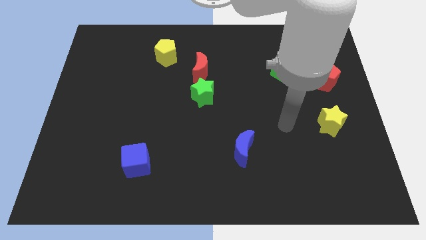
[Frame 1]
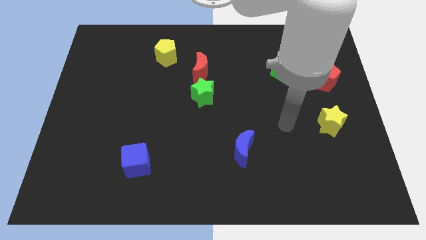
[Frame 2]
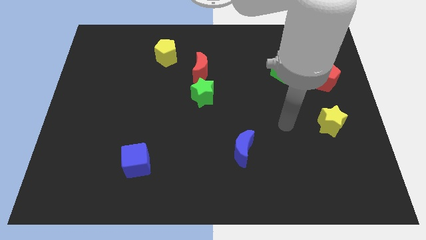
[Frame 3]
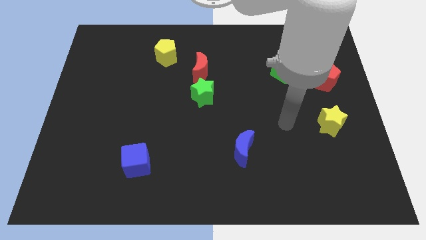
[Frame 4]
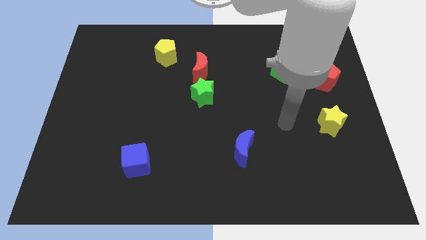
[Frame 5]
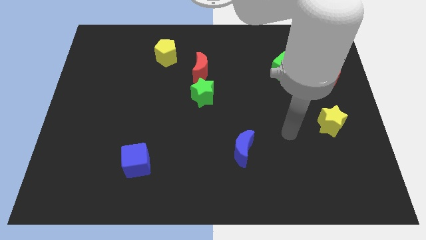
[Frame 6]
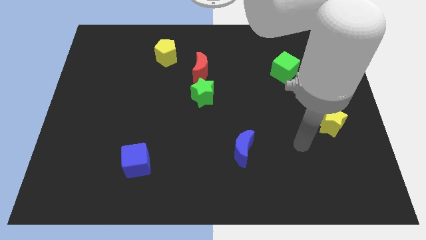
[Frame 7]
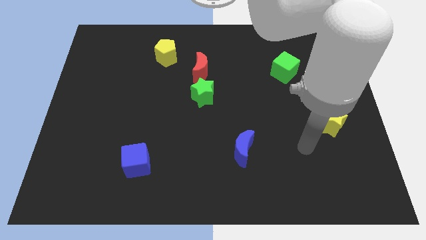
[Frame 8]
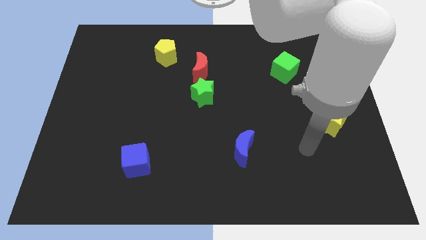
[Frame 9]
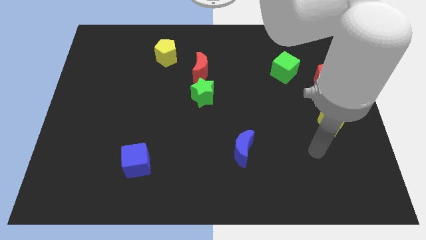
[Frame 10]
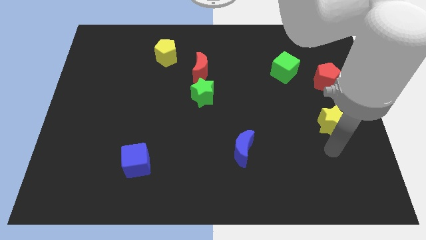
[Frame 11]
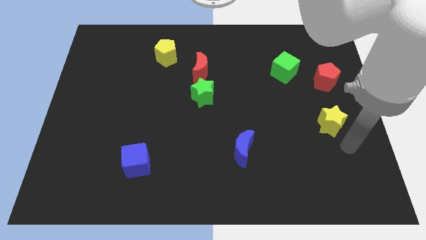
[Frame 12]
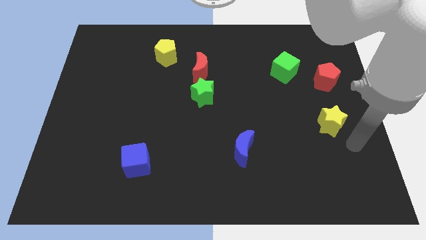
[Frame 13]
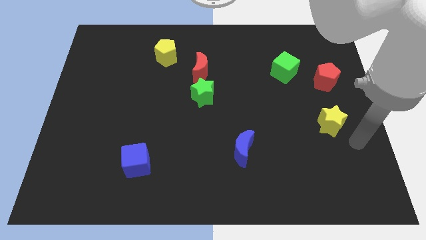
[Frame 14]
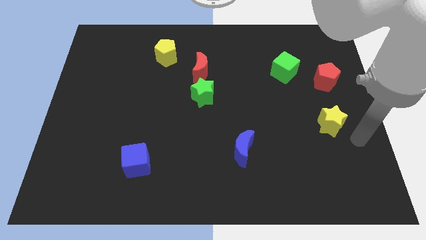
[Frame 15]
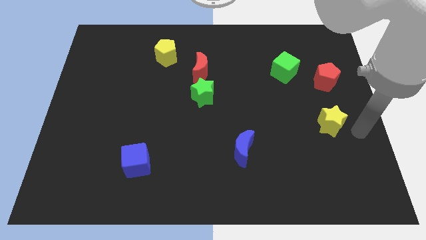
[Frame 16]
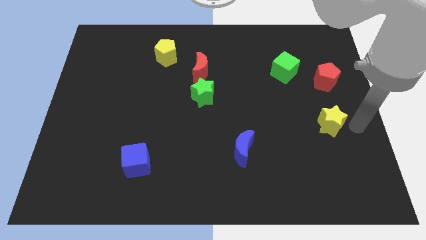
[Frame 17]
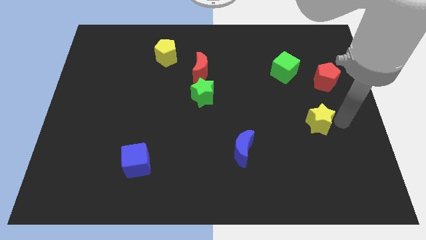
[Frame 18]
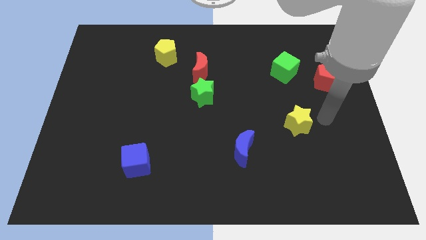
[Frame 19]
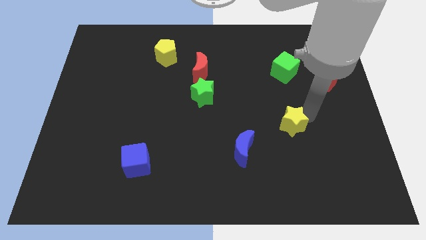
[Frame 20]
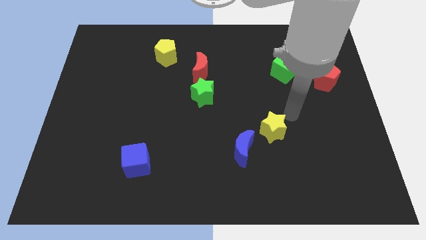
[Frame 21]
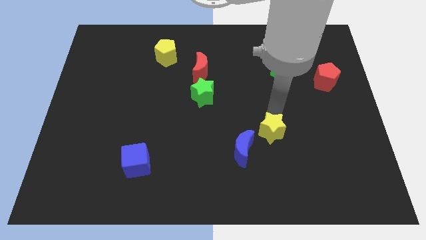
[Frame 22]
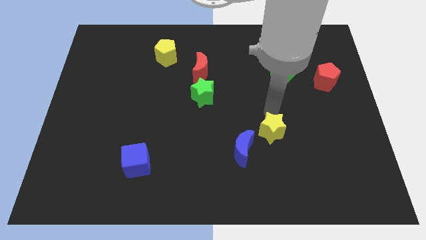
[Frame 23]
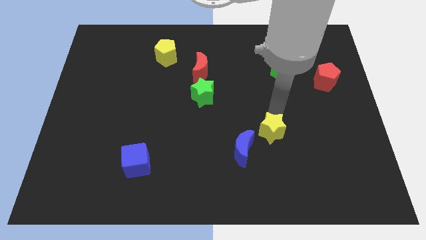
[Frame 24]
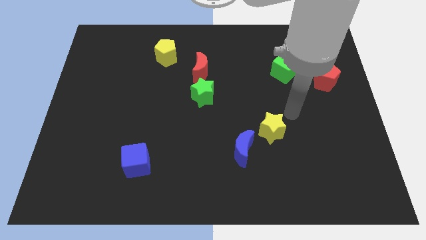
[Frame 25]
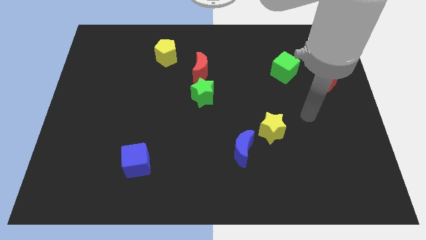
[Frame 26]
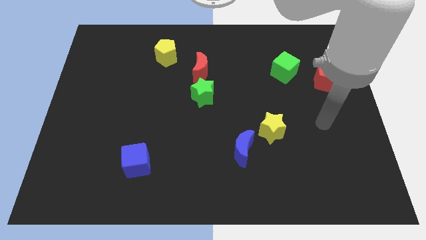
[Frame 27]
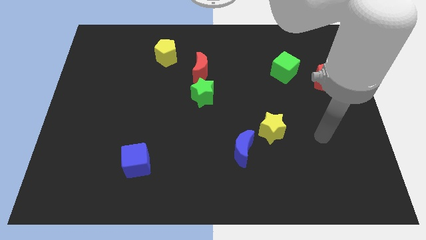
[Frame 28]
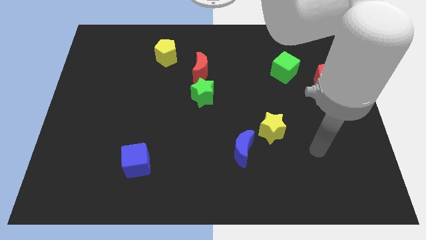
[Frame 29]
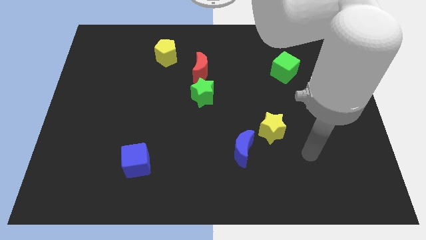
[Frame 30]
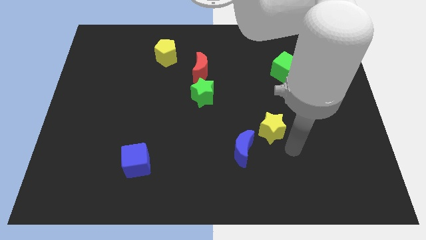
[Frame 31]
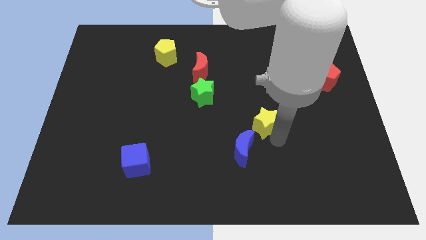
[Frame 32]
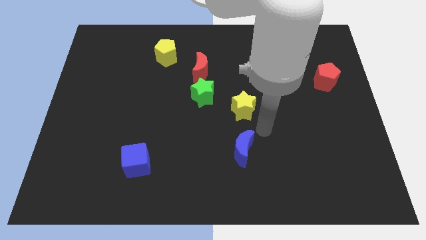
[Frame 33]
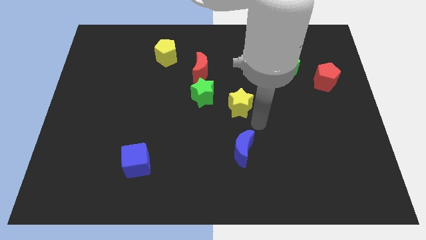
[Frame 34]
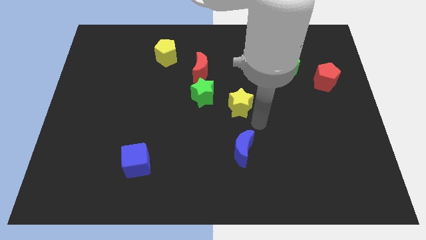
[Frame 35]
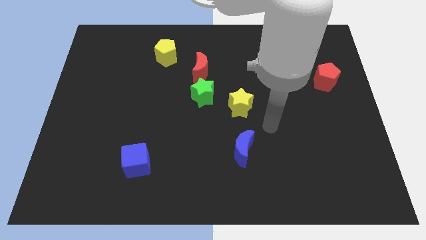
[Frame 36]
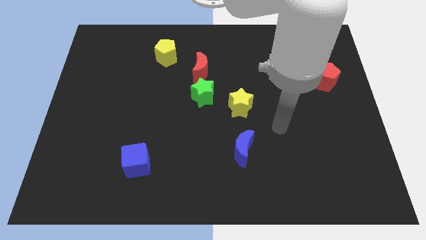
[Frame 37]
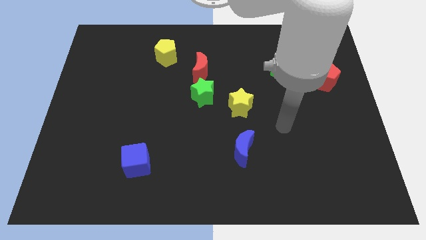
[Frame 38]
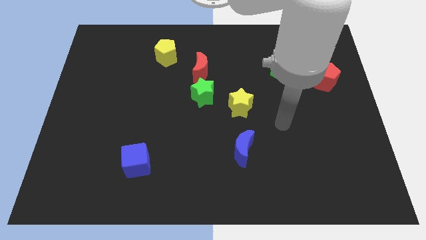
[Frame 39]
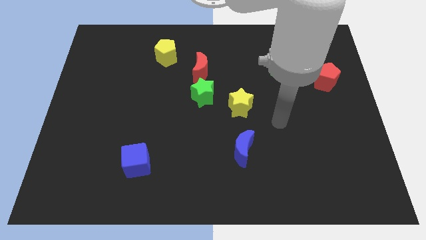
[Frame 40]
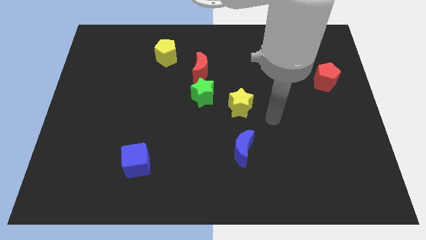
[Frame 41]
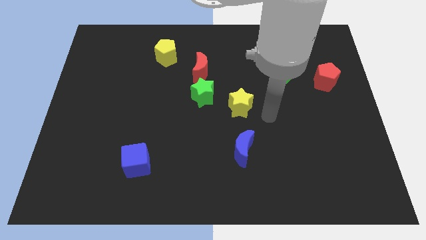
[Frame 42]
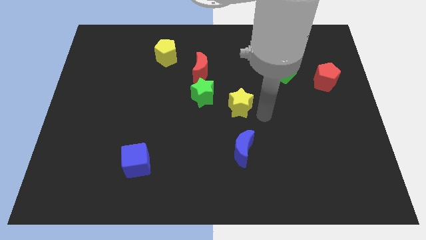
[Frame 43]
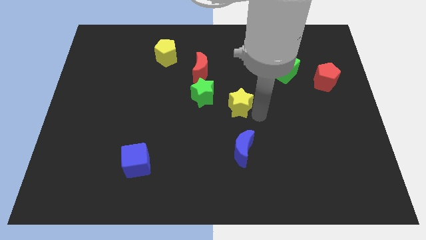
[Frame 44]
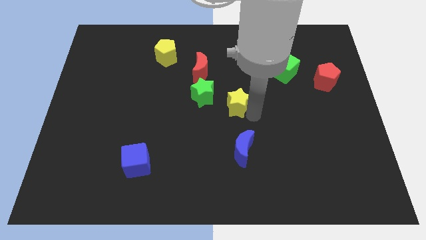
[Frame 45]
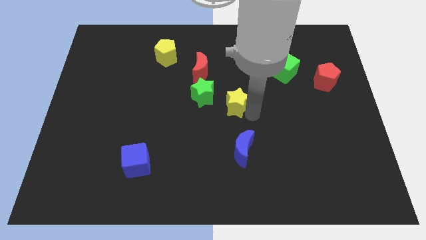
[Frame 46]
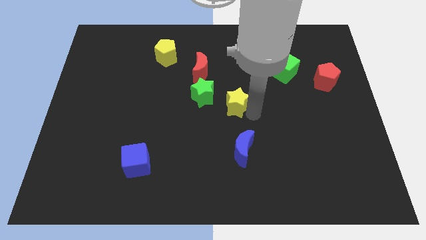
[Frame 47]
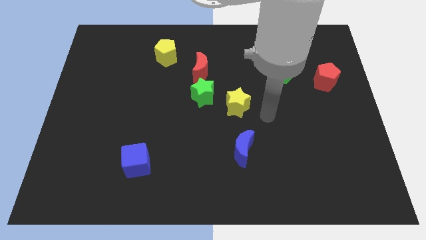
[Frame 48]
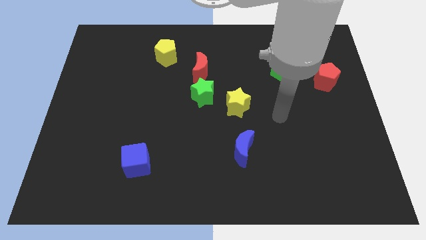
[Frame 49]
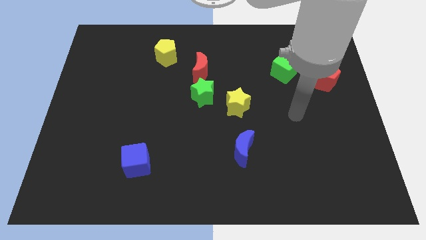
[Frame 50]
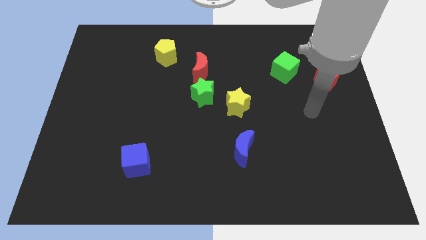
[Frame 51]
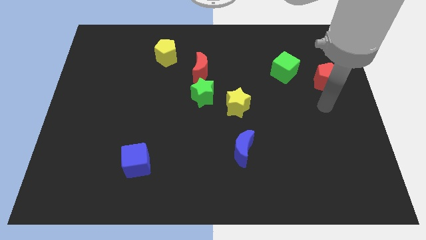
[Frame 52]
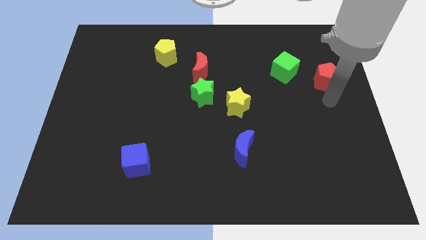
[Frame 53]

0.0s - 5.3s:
move the yellow star to the center of the board

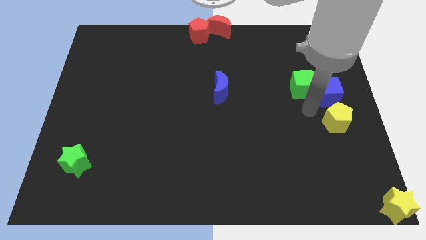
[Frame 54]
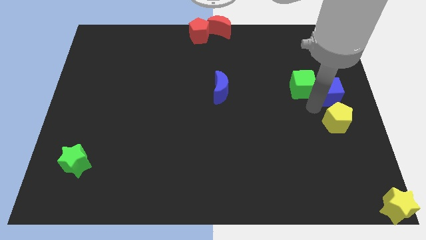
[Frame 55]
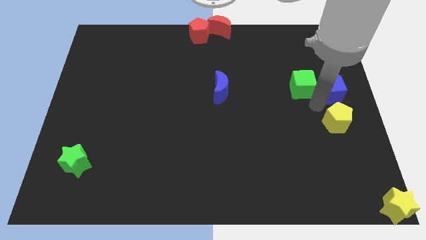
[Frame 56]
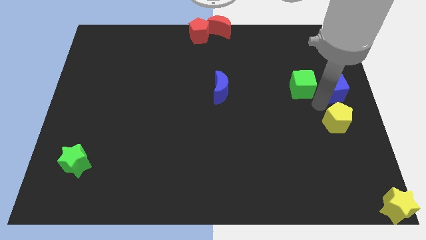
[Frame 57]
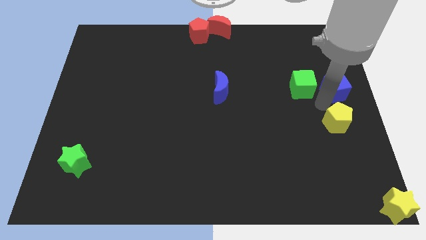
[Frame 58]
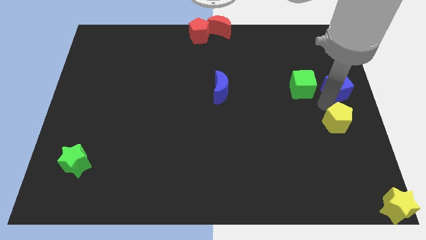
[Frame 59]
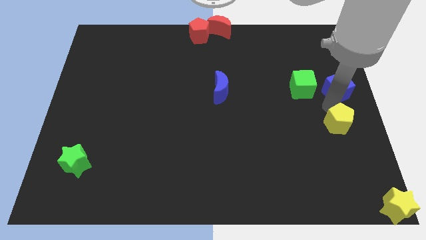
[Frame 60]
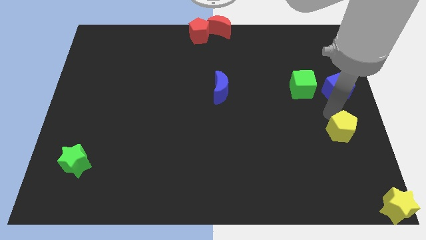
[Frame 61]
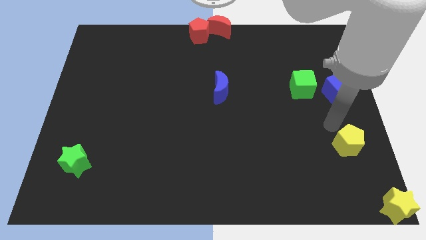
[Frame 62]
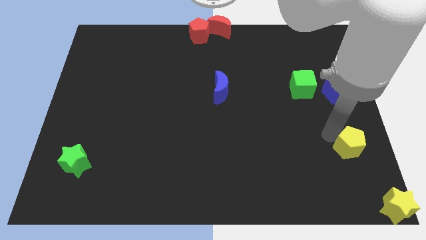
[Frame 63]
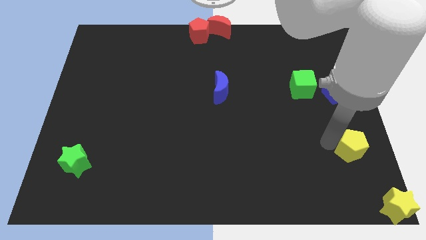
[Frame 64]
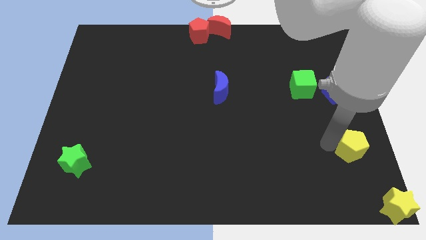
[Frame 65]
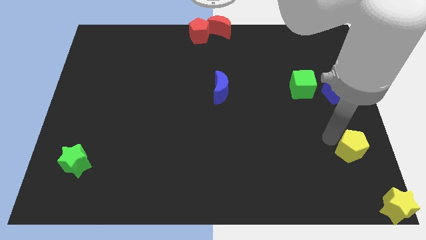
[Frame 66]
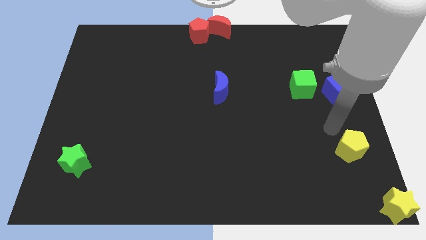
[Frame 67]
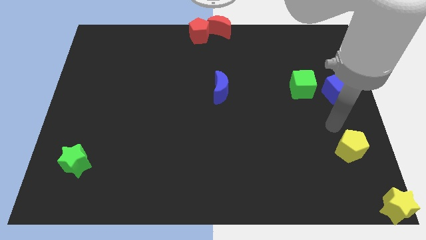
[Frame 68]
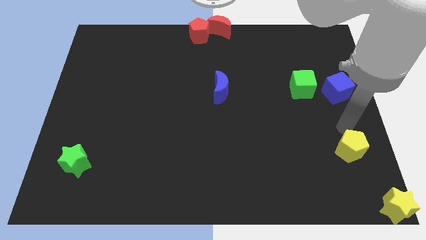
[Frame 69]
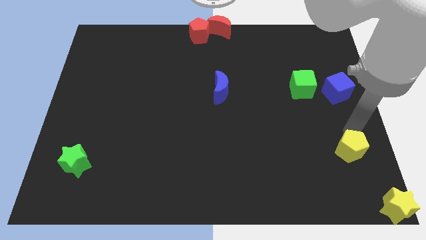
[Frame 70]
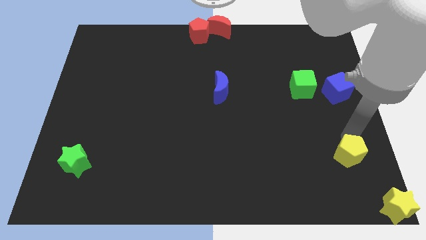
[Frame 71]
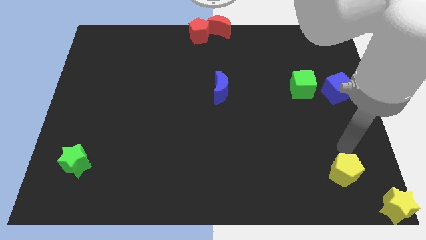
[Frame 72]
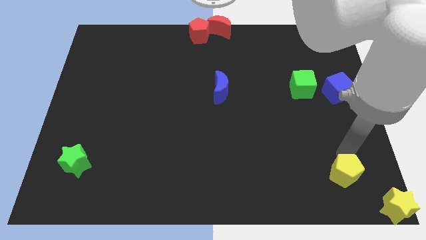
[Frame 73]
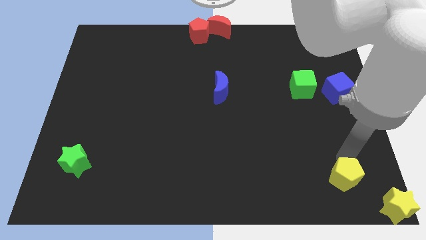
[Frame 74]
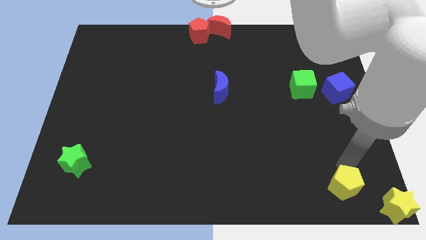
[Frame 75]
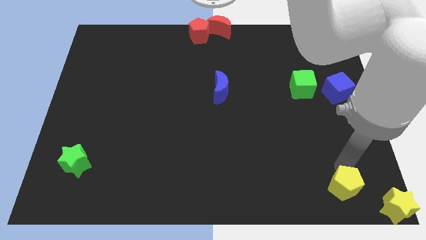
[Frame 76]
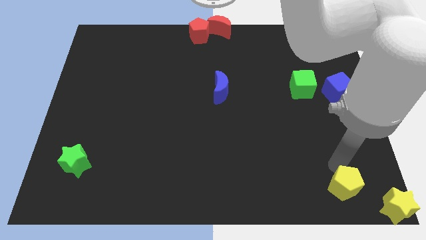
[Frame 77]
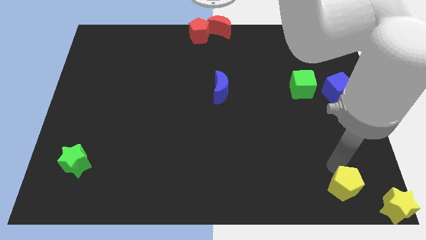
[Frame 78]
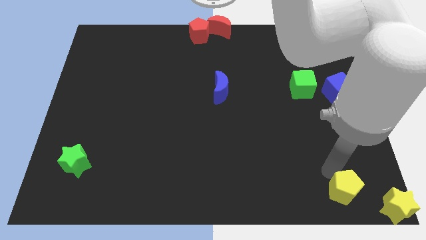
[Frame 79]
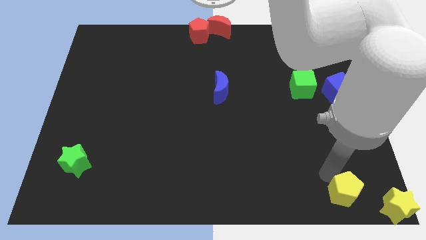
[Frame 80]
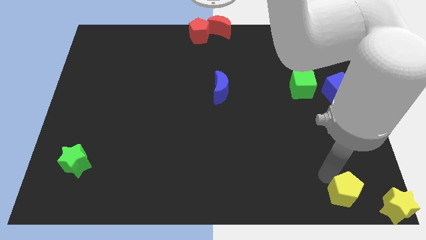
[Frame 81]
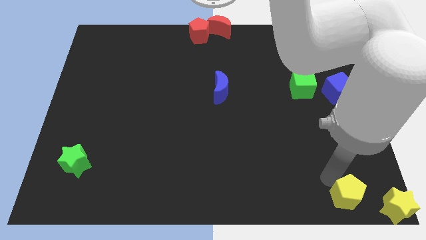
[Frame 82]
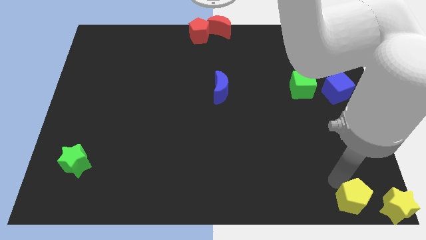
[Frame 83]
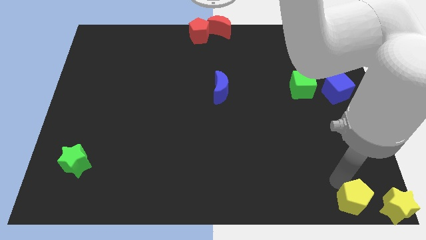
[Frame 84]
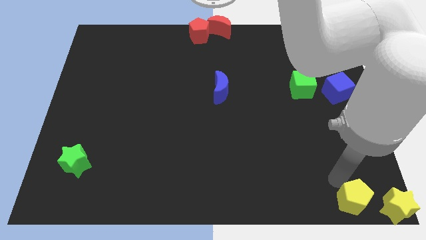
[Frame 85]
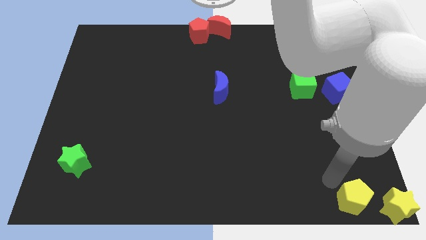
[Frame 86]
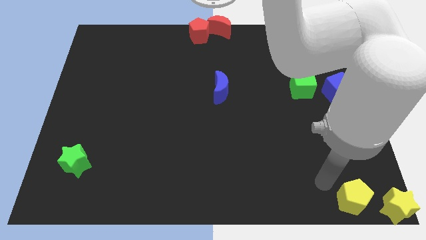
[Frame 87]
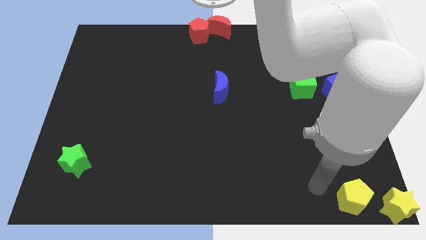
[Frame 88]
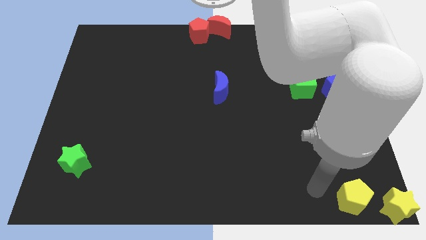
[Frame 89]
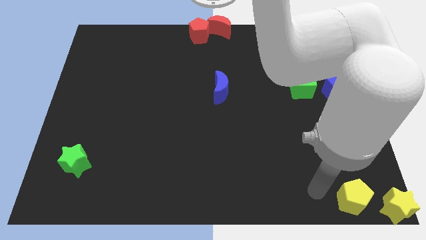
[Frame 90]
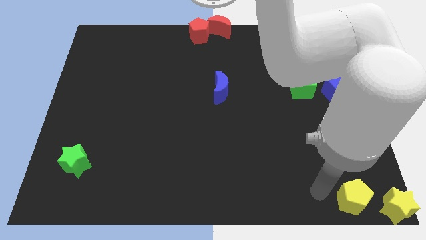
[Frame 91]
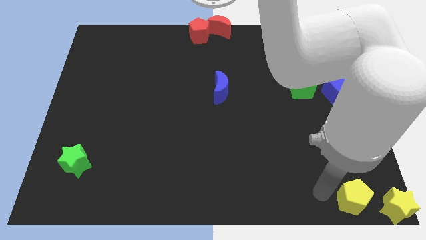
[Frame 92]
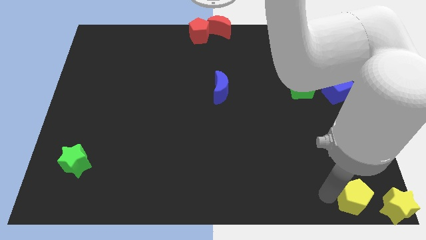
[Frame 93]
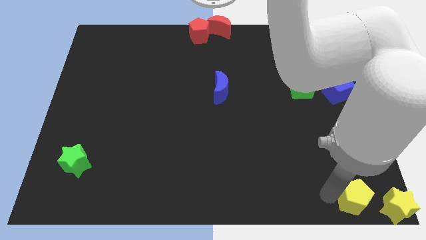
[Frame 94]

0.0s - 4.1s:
slide yellow pentagon to the left of yellow star
